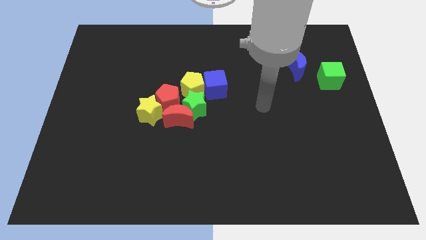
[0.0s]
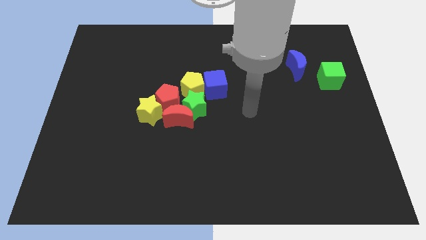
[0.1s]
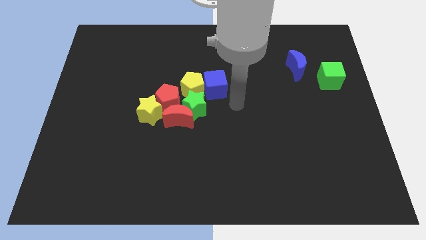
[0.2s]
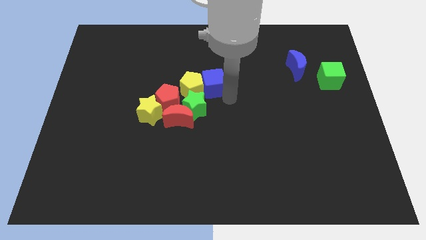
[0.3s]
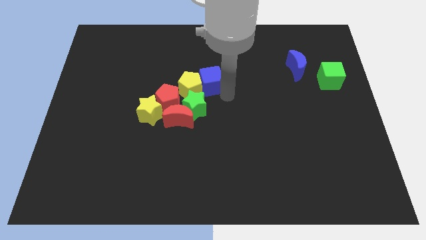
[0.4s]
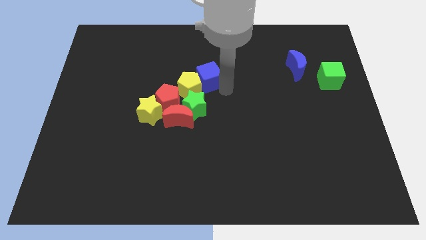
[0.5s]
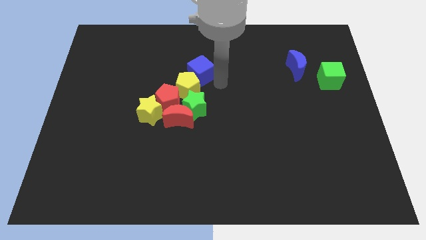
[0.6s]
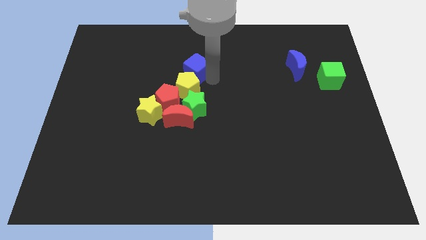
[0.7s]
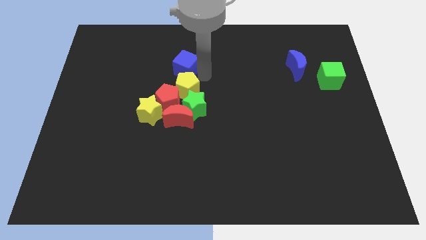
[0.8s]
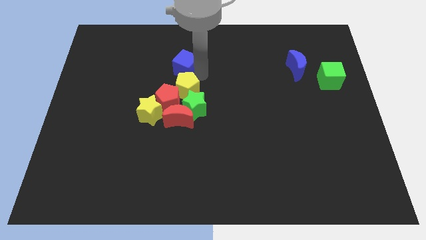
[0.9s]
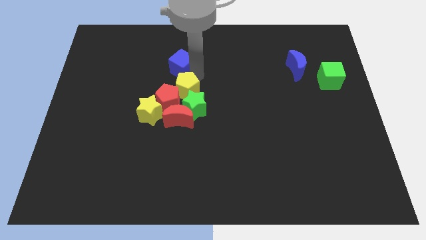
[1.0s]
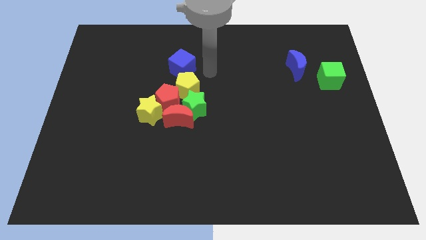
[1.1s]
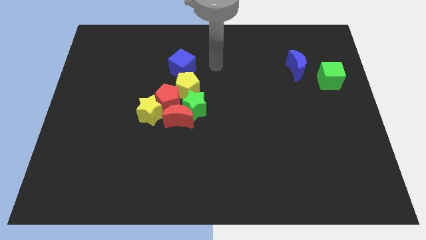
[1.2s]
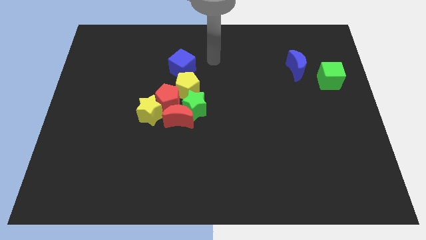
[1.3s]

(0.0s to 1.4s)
place the blue cube above the yellow pentagon

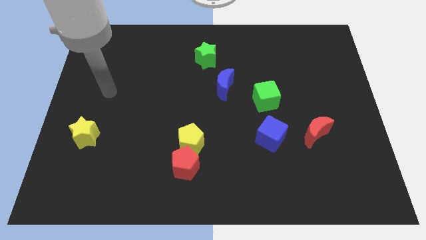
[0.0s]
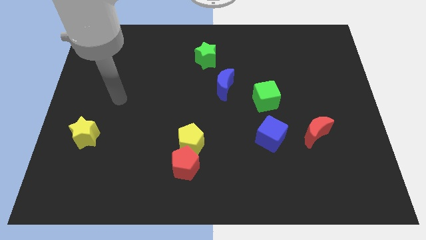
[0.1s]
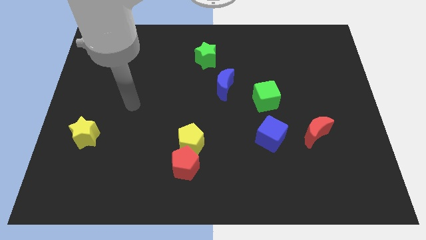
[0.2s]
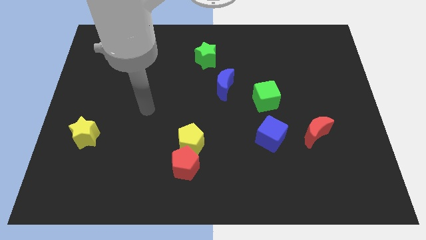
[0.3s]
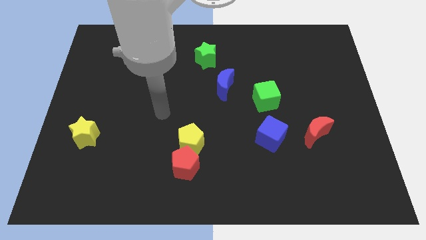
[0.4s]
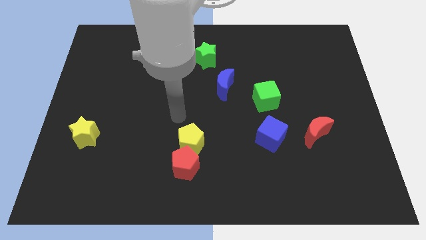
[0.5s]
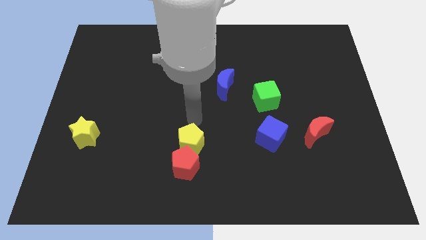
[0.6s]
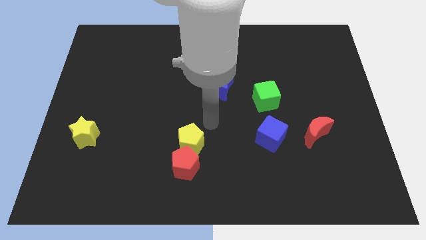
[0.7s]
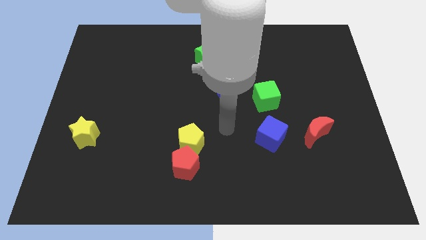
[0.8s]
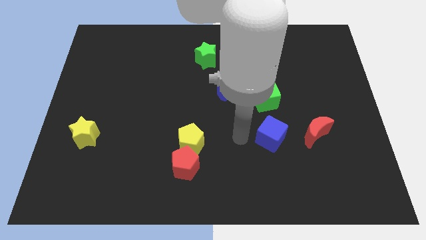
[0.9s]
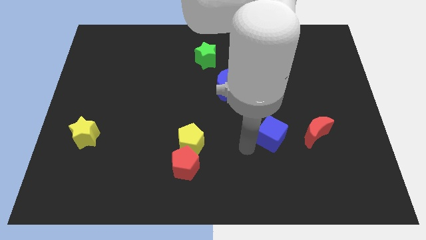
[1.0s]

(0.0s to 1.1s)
point your arm at the left of the blue cube

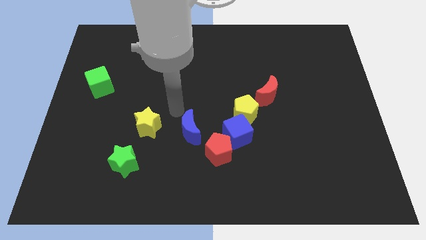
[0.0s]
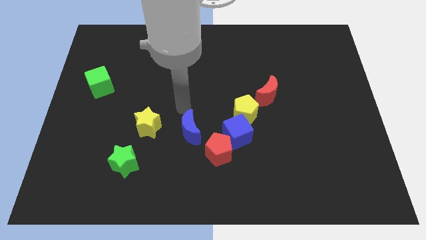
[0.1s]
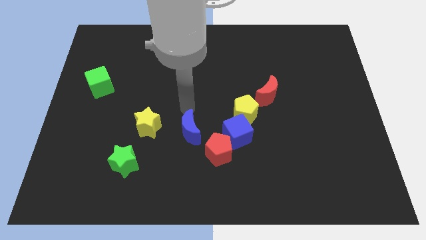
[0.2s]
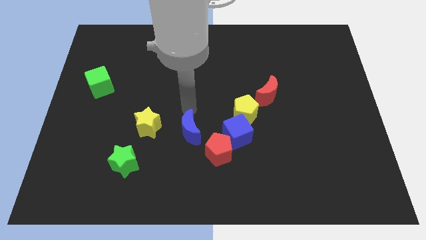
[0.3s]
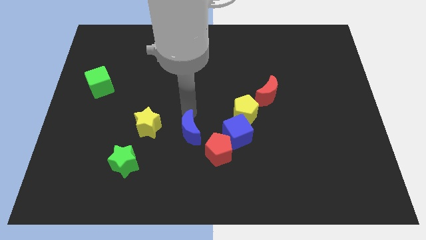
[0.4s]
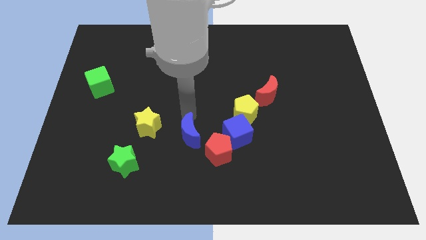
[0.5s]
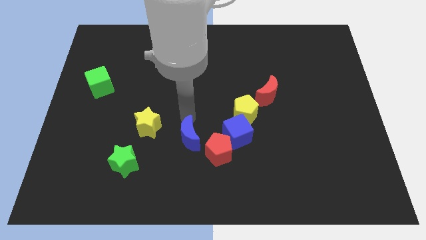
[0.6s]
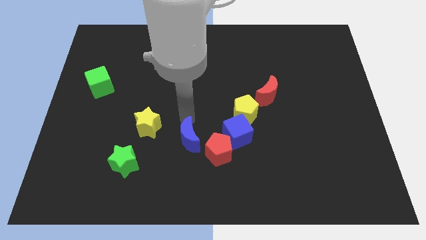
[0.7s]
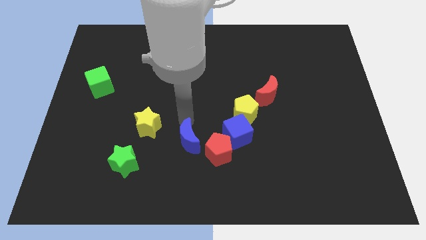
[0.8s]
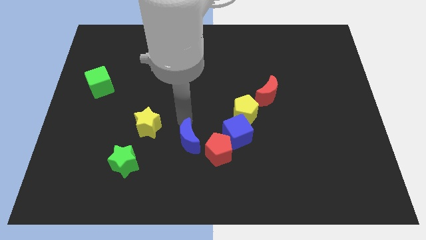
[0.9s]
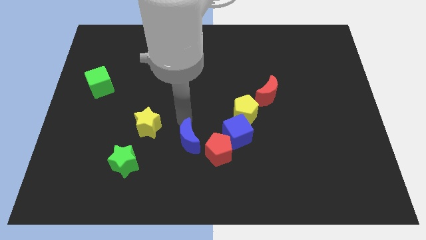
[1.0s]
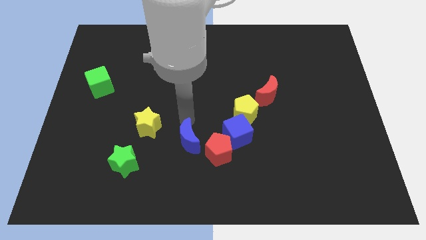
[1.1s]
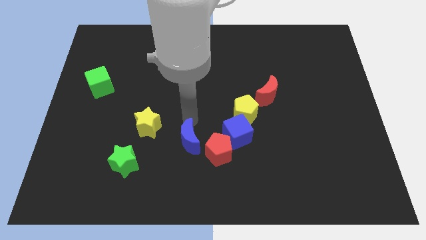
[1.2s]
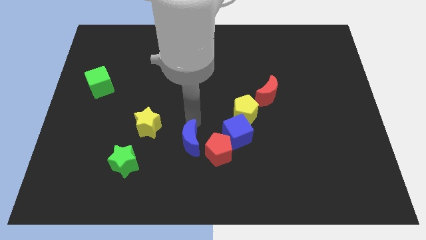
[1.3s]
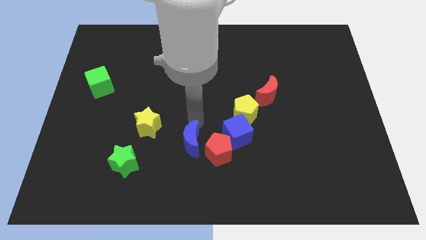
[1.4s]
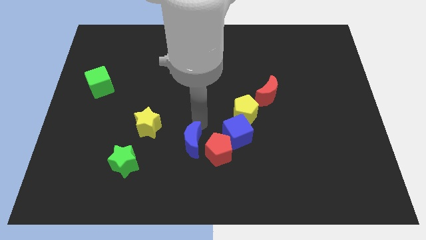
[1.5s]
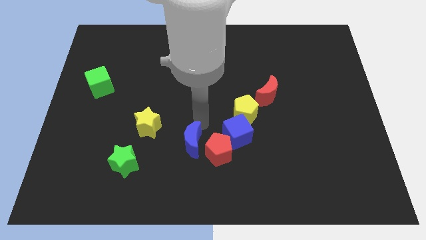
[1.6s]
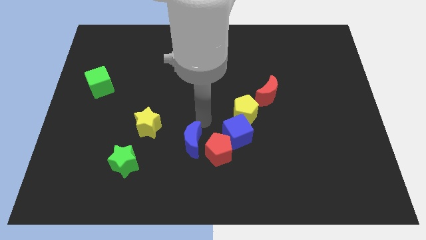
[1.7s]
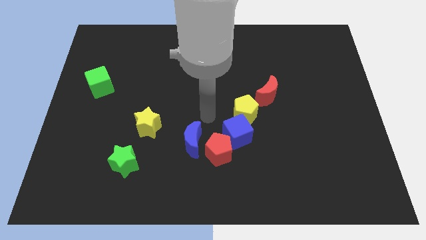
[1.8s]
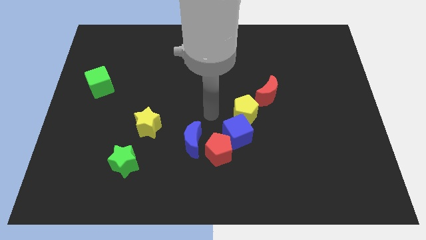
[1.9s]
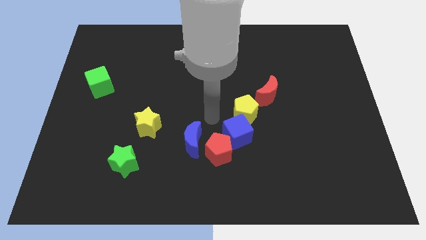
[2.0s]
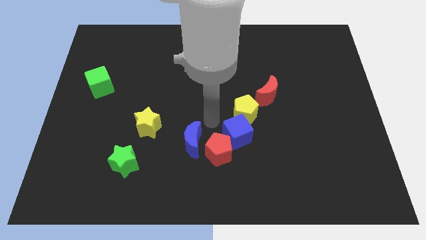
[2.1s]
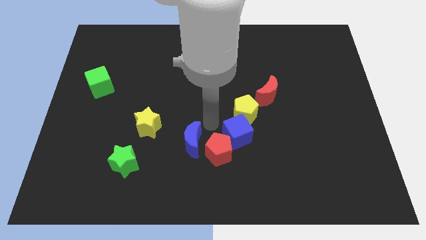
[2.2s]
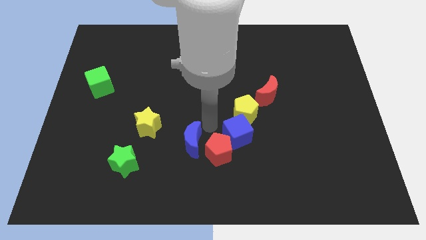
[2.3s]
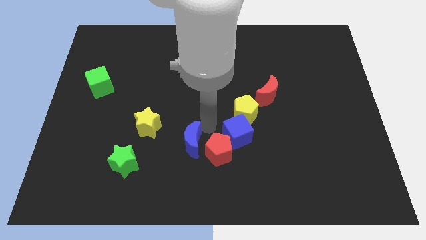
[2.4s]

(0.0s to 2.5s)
push the blue moon downwards slightly

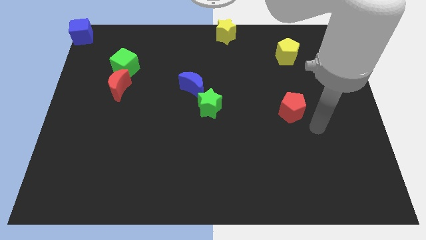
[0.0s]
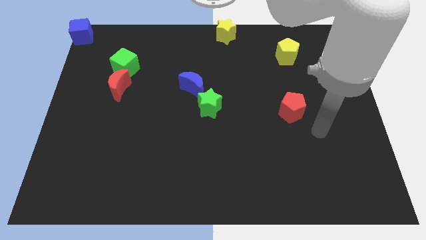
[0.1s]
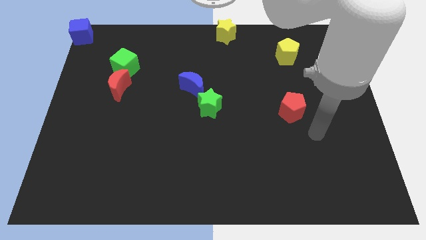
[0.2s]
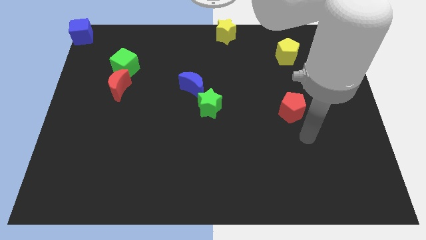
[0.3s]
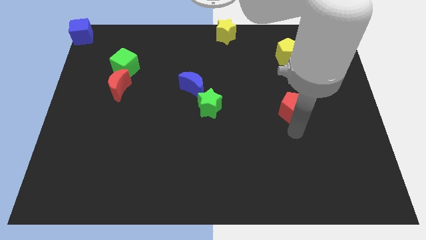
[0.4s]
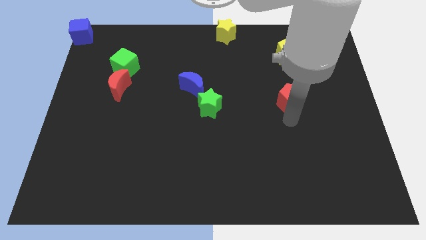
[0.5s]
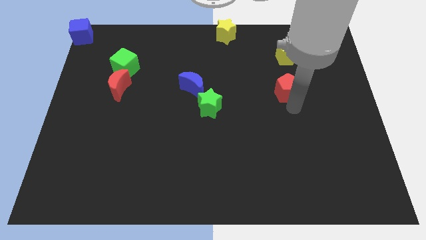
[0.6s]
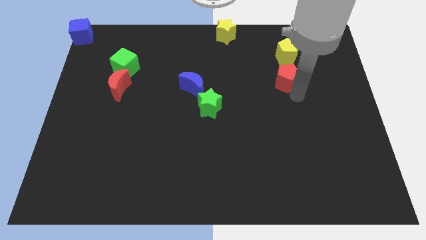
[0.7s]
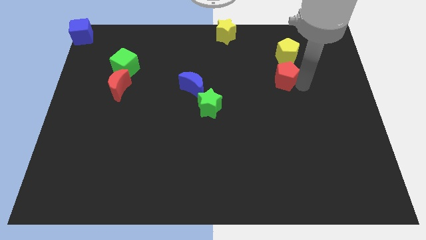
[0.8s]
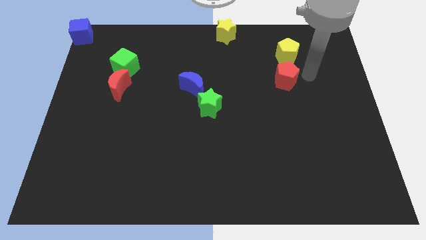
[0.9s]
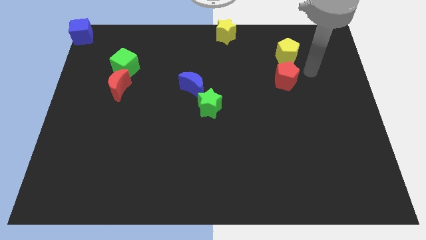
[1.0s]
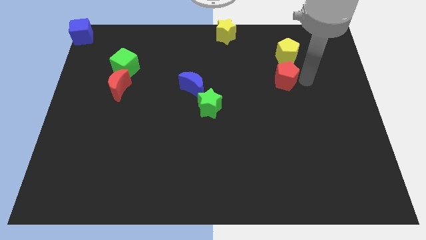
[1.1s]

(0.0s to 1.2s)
place red pentagon below yellow pentagon

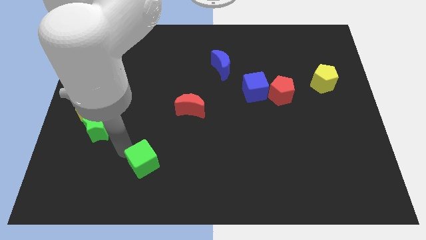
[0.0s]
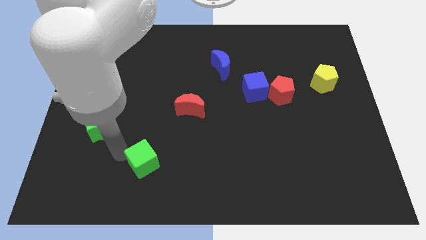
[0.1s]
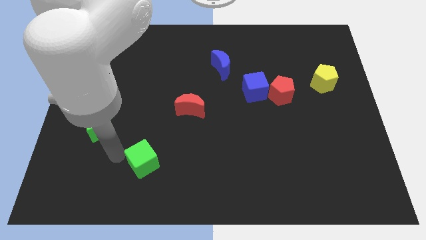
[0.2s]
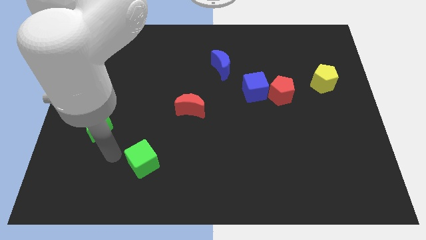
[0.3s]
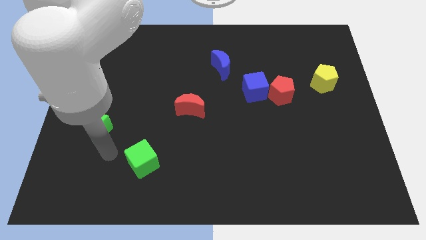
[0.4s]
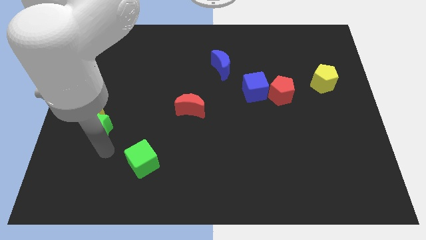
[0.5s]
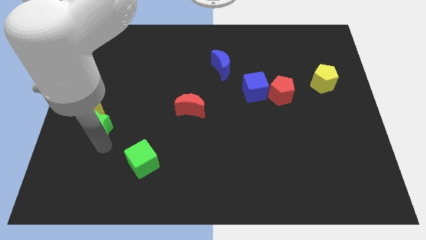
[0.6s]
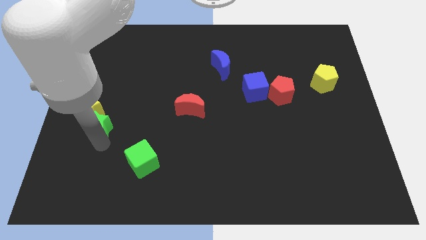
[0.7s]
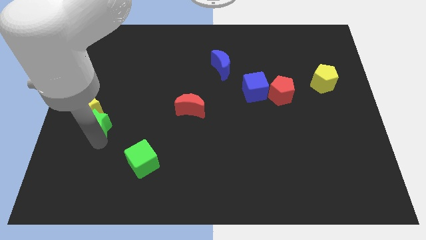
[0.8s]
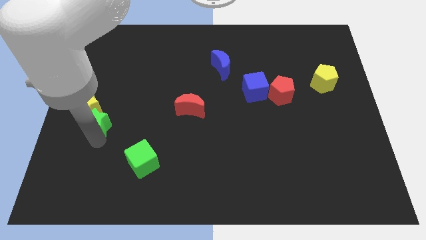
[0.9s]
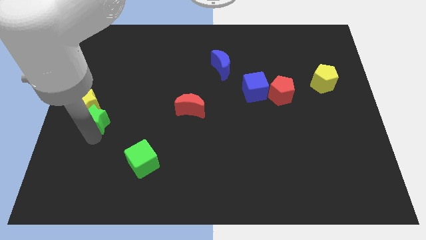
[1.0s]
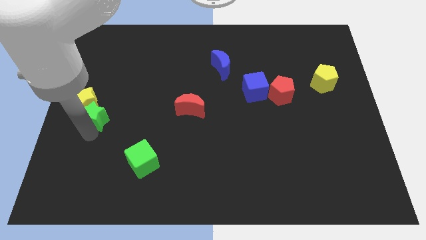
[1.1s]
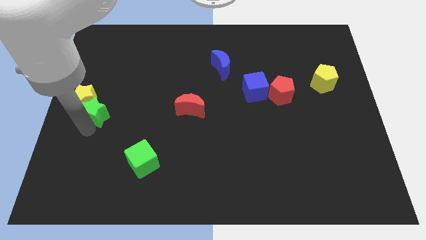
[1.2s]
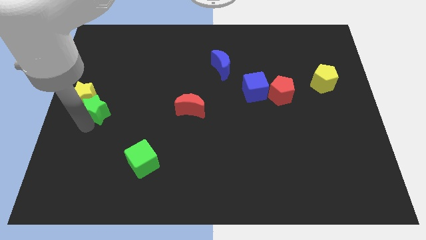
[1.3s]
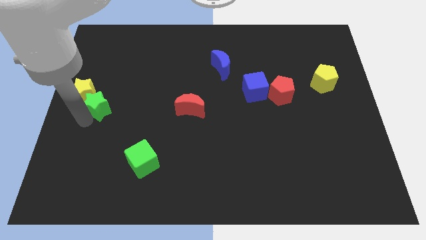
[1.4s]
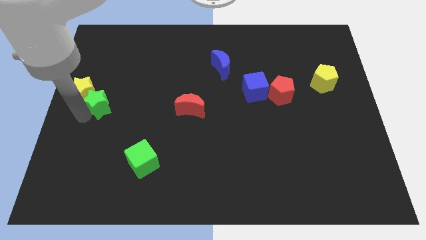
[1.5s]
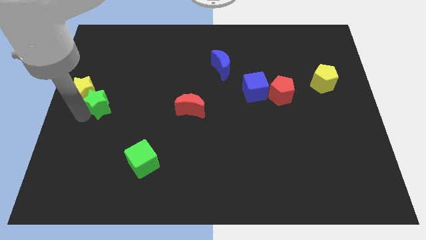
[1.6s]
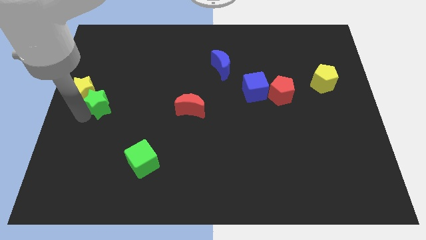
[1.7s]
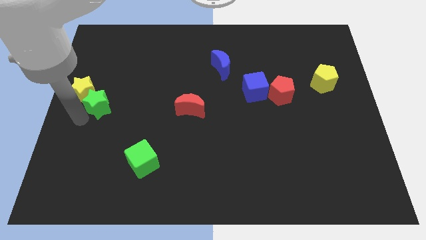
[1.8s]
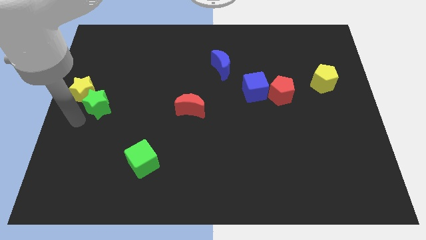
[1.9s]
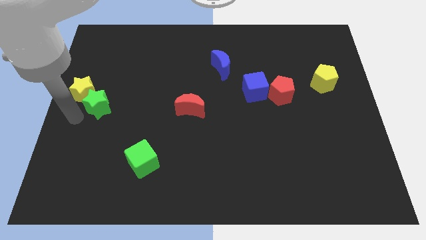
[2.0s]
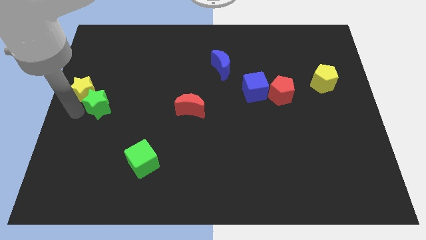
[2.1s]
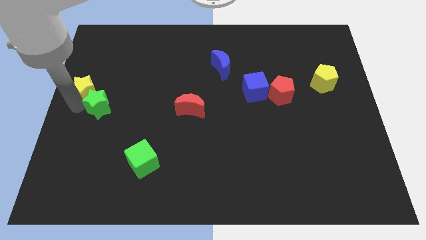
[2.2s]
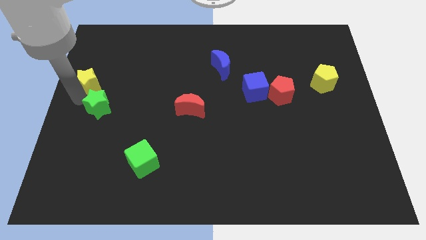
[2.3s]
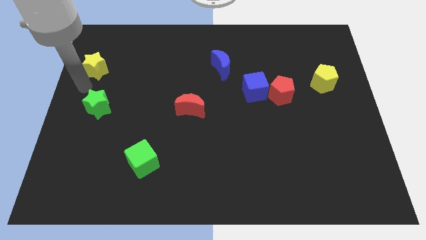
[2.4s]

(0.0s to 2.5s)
separate the yellow star from green star

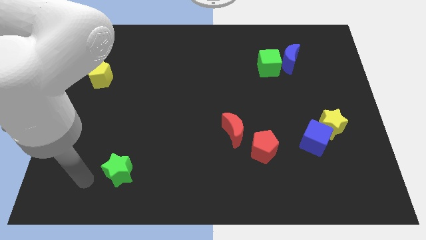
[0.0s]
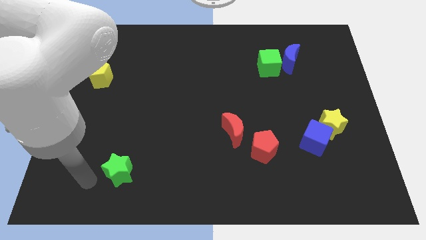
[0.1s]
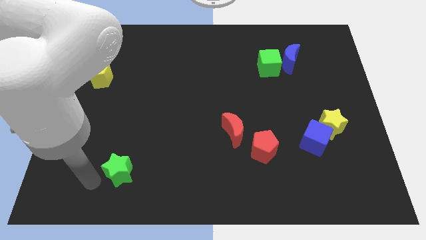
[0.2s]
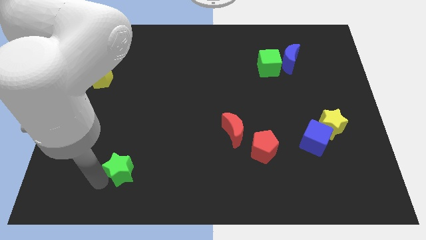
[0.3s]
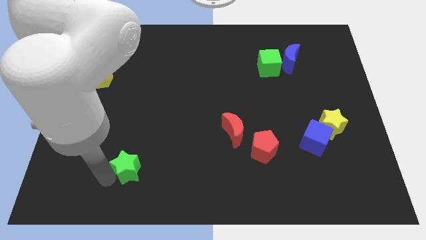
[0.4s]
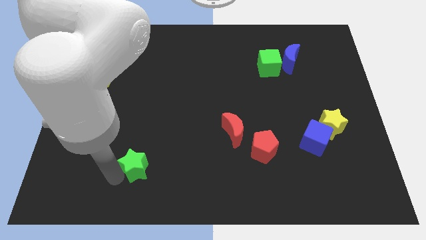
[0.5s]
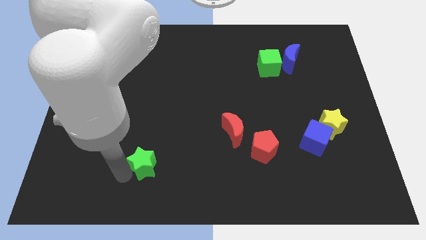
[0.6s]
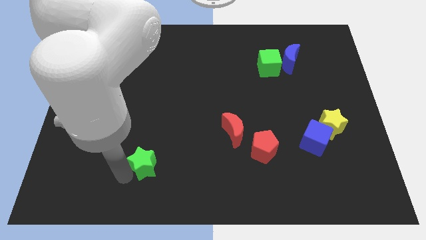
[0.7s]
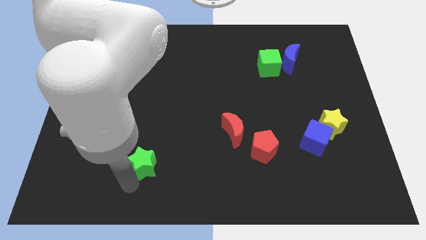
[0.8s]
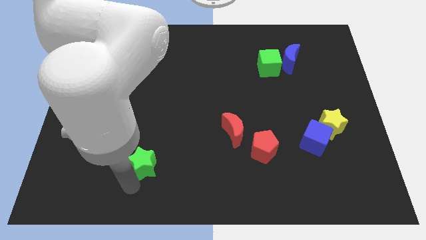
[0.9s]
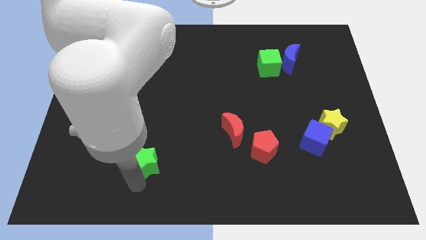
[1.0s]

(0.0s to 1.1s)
move green star slightly right
